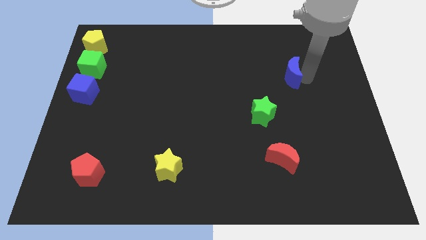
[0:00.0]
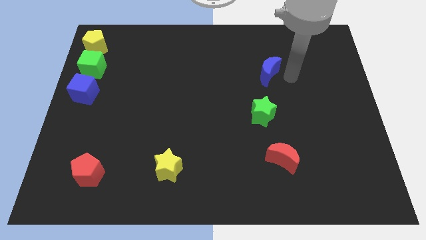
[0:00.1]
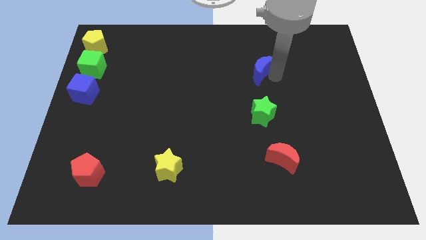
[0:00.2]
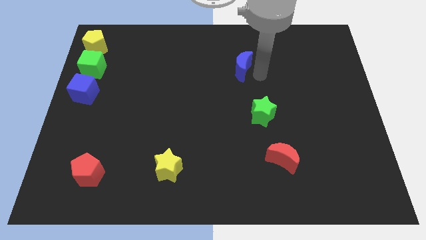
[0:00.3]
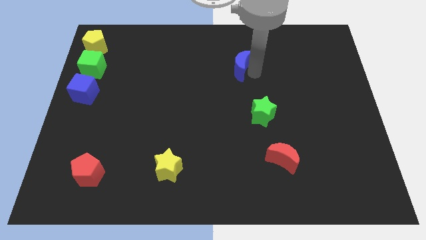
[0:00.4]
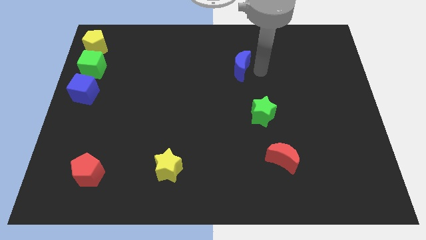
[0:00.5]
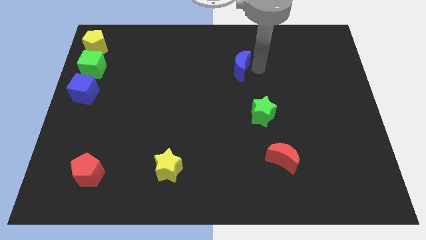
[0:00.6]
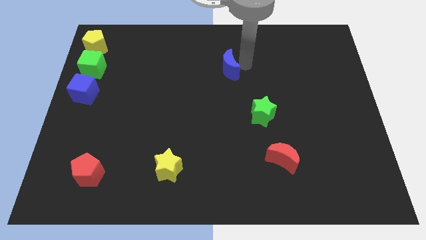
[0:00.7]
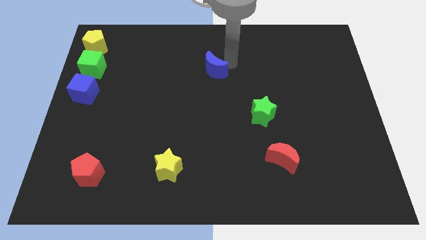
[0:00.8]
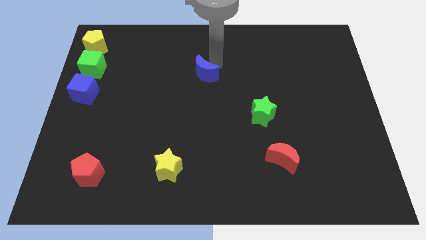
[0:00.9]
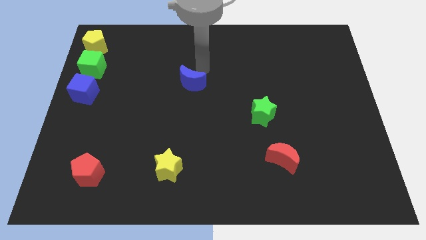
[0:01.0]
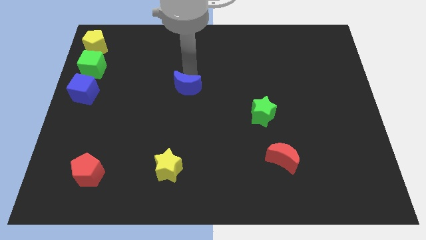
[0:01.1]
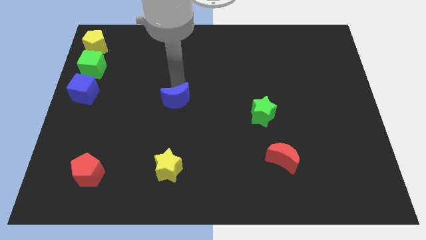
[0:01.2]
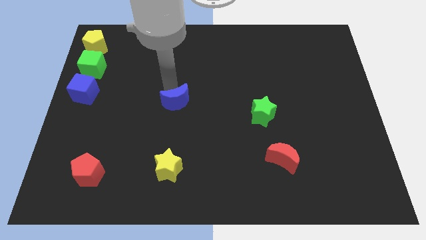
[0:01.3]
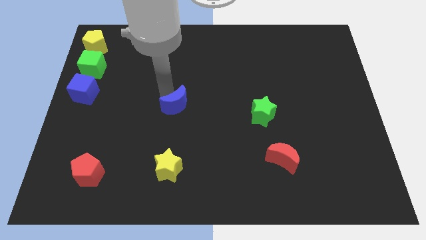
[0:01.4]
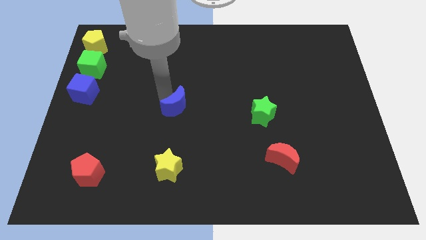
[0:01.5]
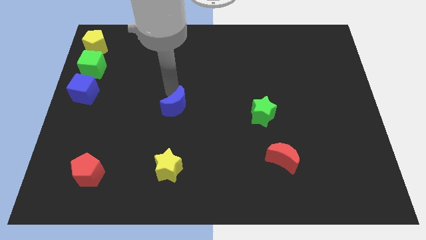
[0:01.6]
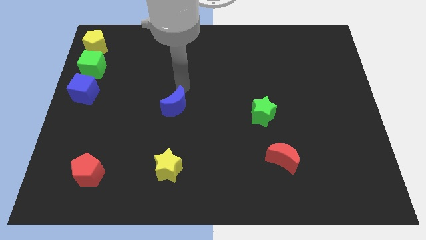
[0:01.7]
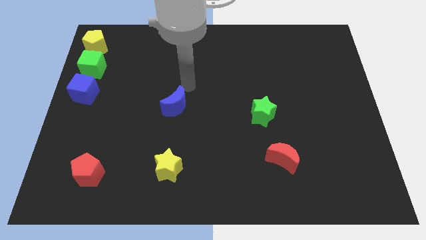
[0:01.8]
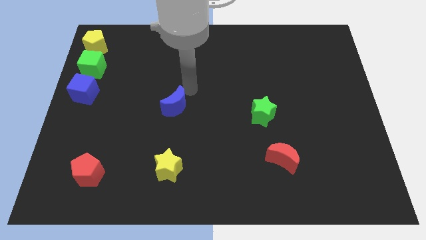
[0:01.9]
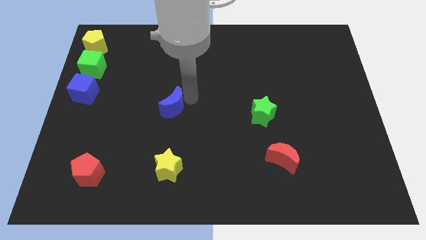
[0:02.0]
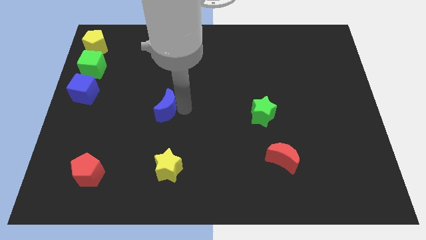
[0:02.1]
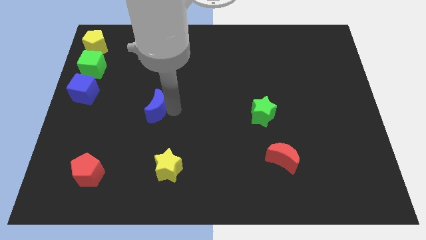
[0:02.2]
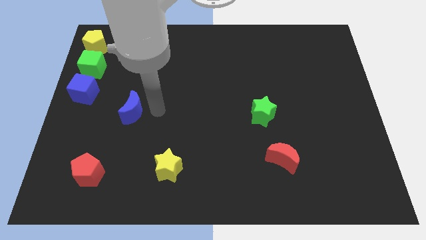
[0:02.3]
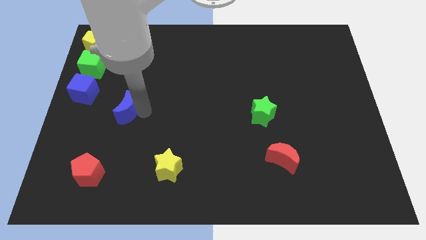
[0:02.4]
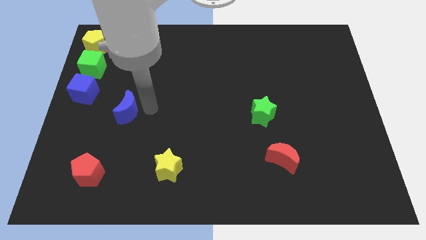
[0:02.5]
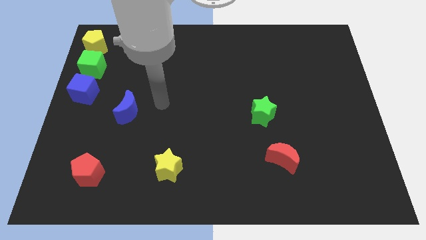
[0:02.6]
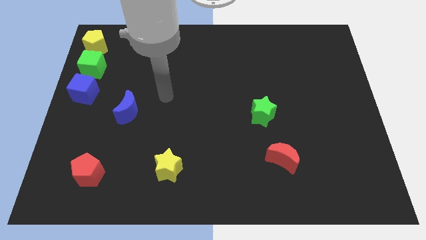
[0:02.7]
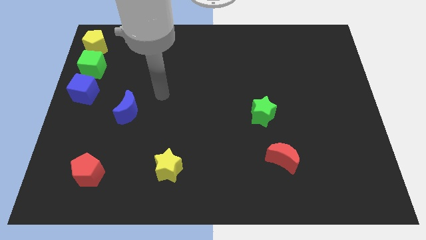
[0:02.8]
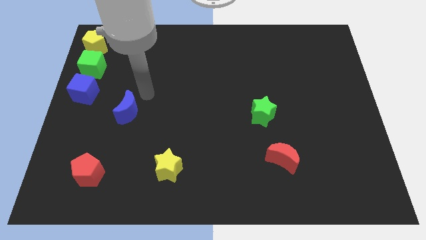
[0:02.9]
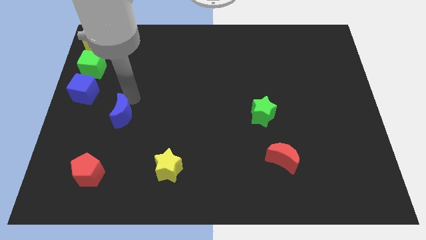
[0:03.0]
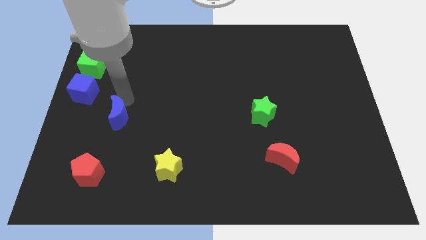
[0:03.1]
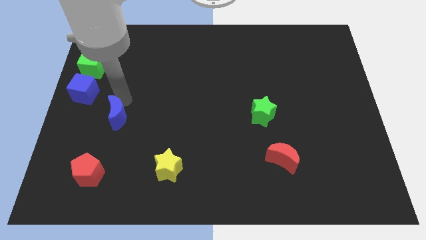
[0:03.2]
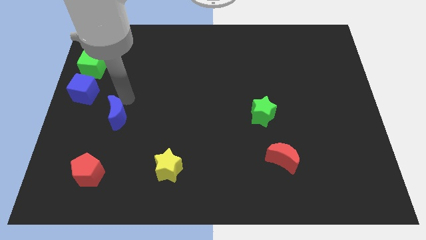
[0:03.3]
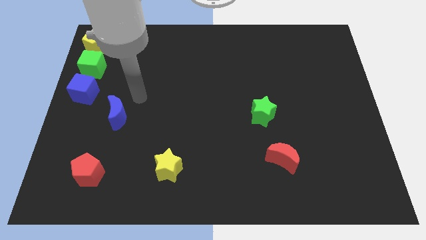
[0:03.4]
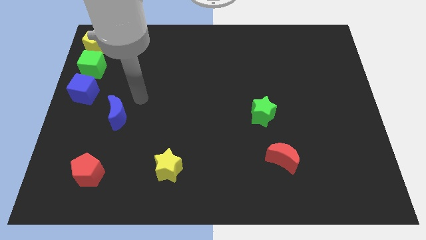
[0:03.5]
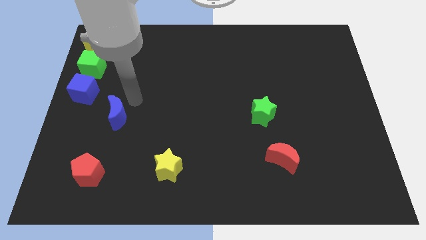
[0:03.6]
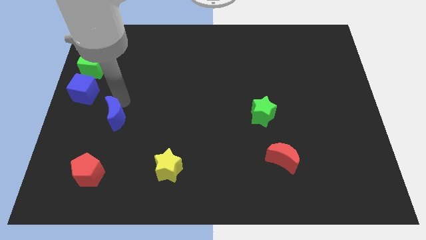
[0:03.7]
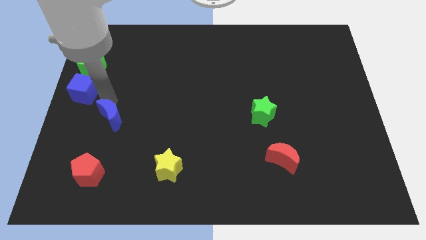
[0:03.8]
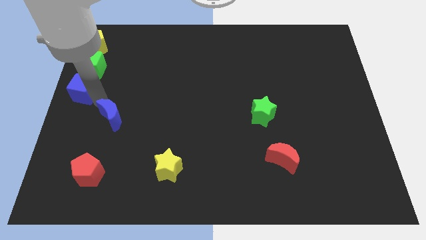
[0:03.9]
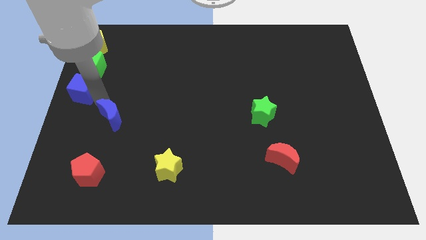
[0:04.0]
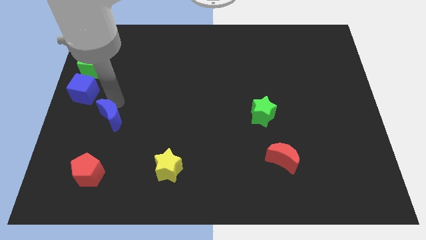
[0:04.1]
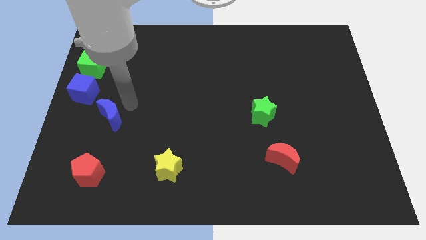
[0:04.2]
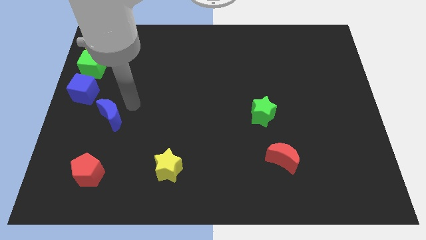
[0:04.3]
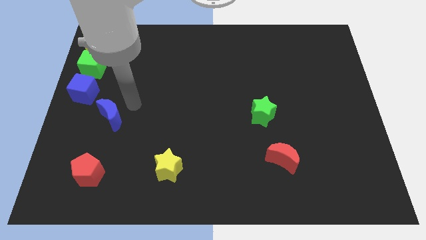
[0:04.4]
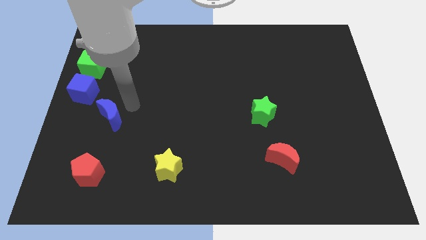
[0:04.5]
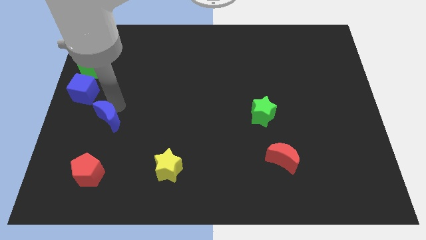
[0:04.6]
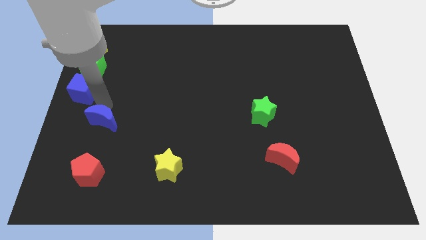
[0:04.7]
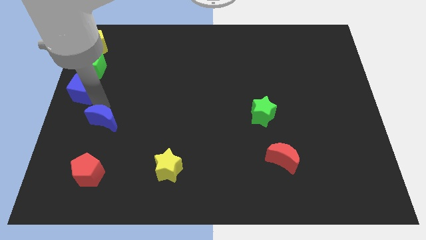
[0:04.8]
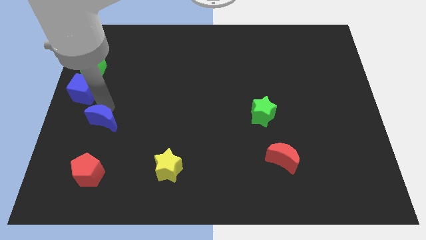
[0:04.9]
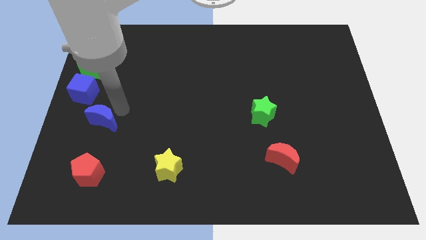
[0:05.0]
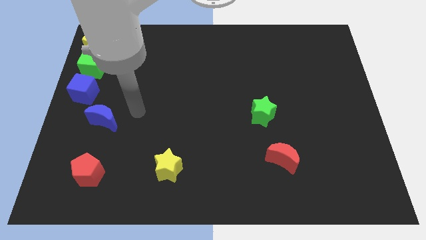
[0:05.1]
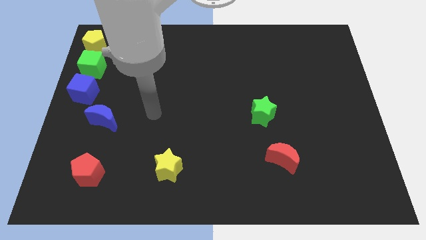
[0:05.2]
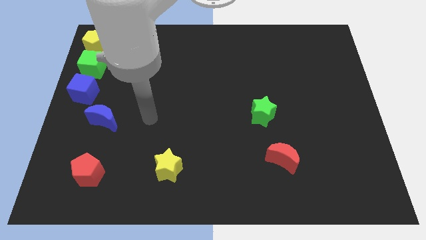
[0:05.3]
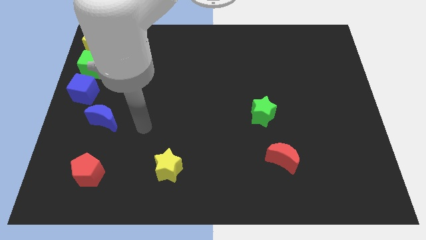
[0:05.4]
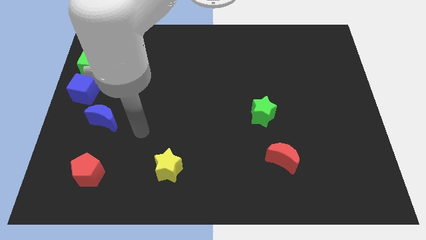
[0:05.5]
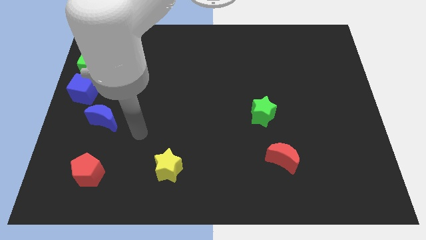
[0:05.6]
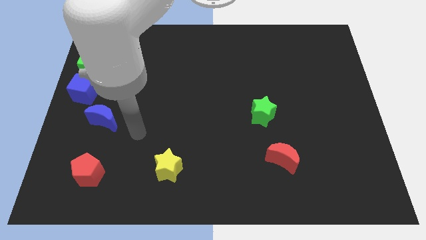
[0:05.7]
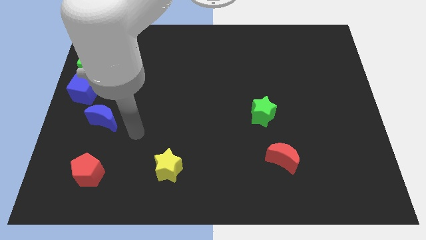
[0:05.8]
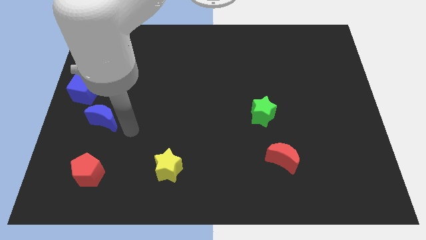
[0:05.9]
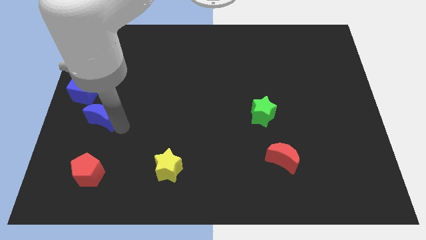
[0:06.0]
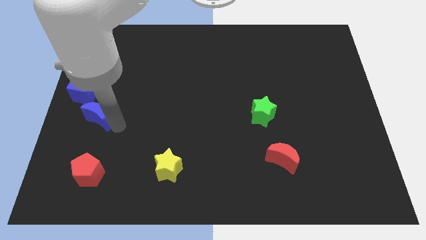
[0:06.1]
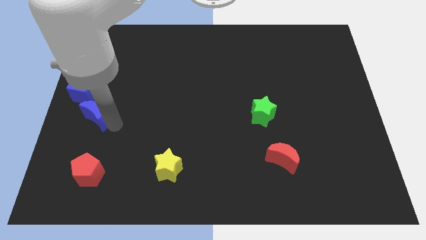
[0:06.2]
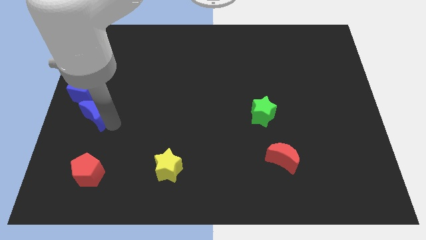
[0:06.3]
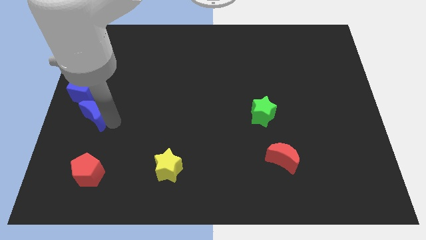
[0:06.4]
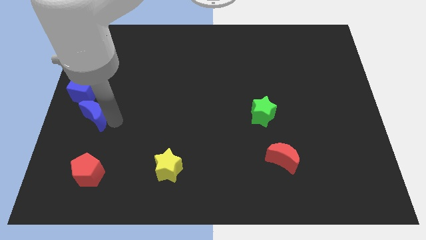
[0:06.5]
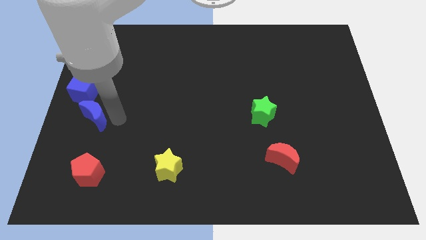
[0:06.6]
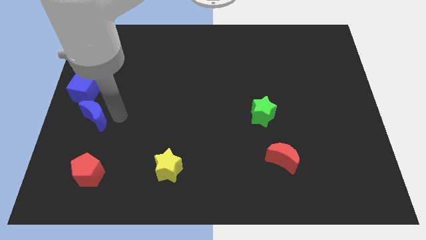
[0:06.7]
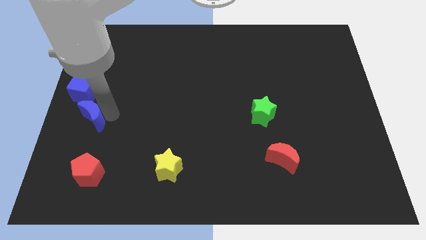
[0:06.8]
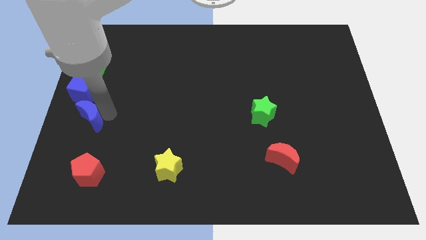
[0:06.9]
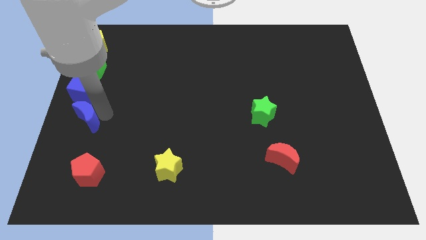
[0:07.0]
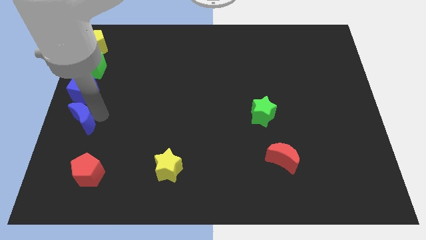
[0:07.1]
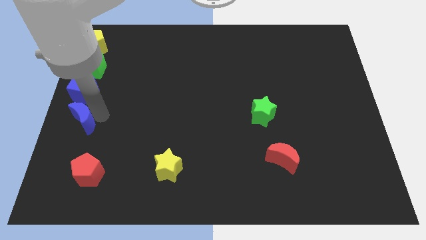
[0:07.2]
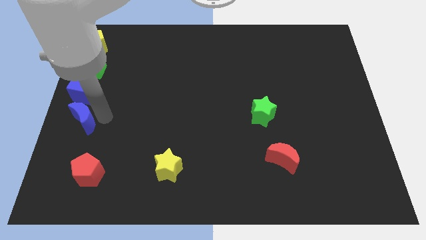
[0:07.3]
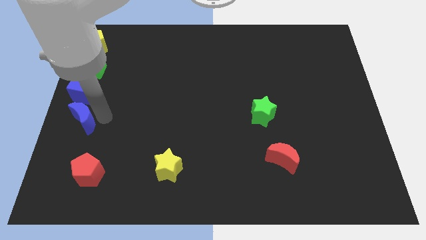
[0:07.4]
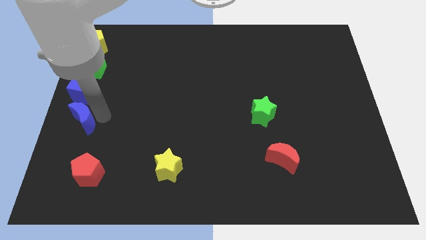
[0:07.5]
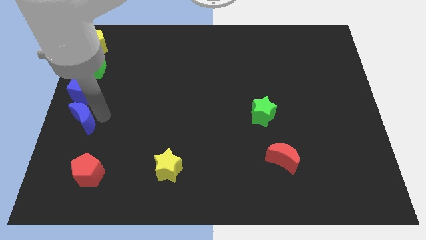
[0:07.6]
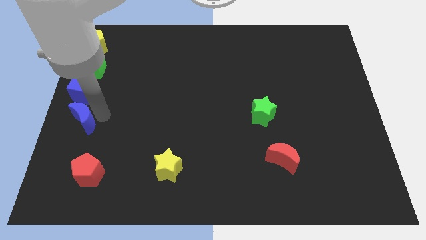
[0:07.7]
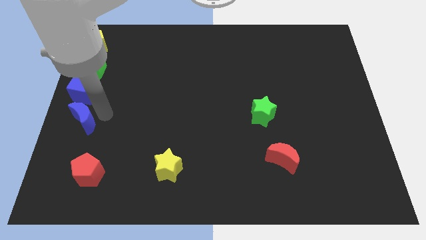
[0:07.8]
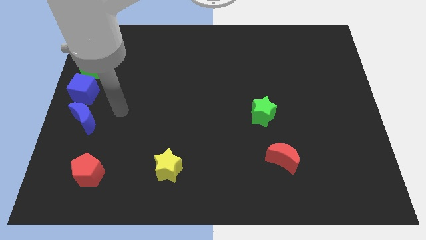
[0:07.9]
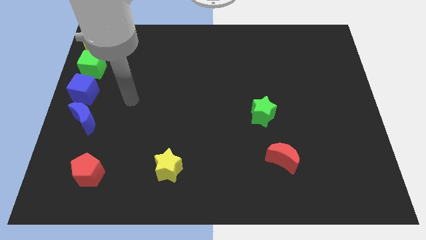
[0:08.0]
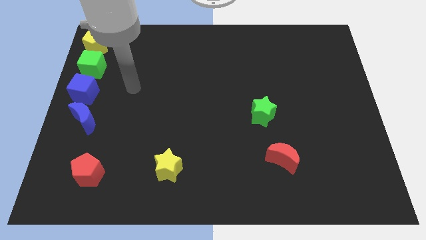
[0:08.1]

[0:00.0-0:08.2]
push the blue crescent to the bottom side of the blue cube

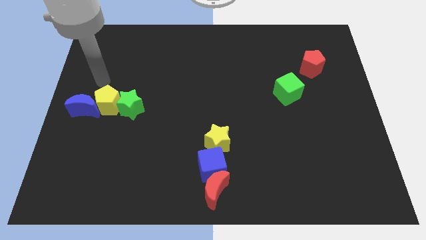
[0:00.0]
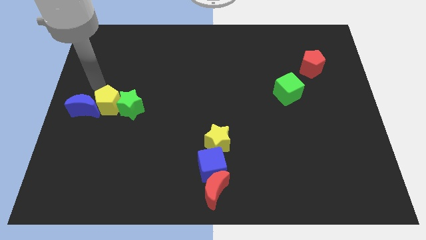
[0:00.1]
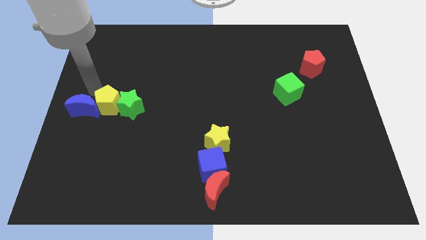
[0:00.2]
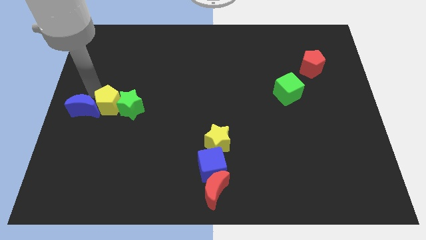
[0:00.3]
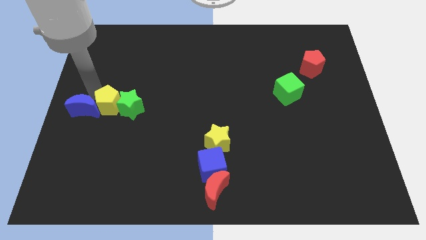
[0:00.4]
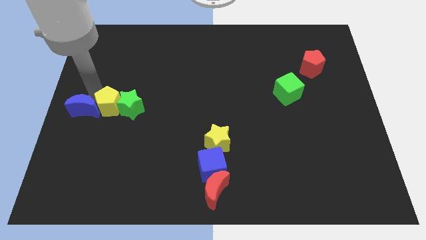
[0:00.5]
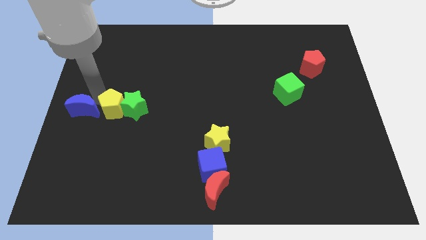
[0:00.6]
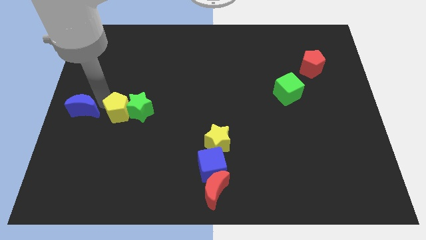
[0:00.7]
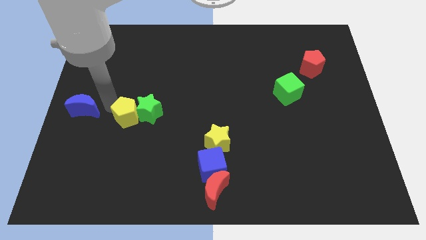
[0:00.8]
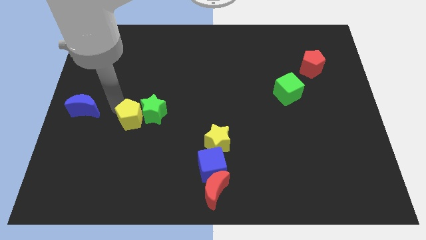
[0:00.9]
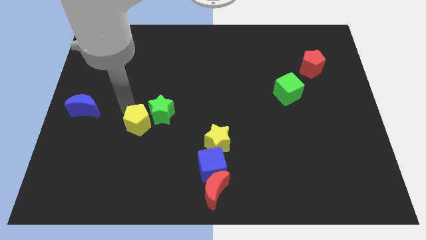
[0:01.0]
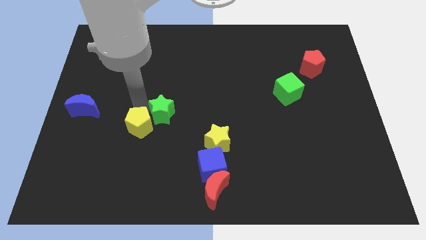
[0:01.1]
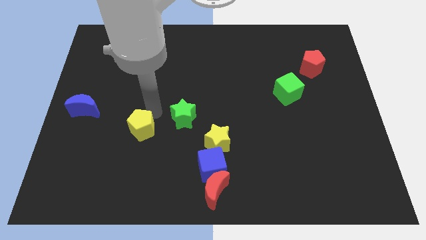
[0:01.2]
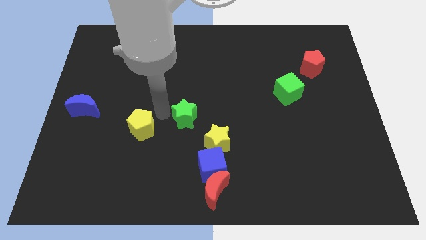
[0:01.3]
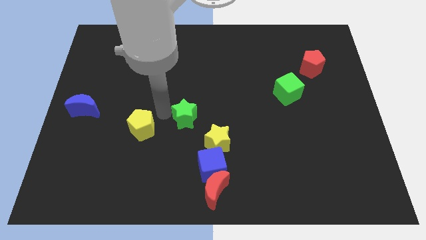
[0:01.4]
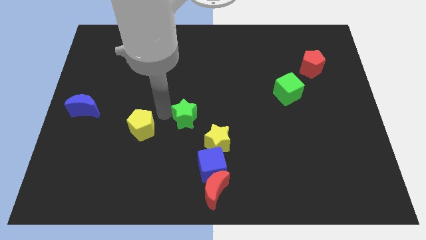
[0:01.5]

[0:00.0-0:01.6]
separate yellow pentagon and green star from blue moon
